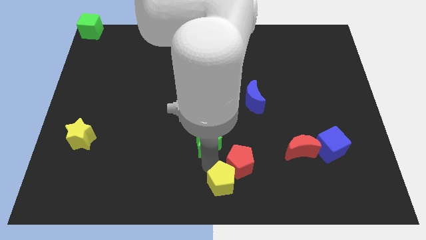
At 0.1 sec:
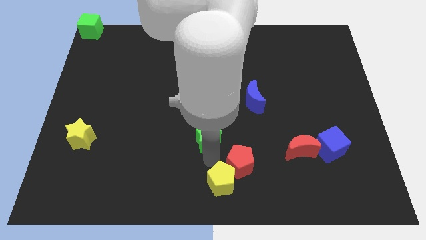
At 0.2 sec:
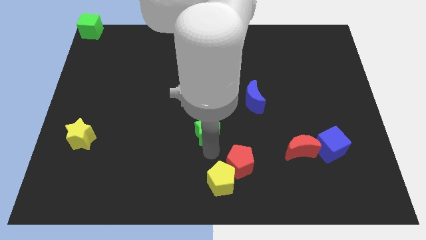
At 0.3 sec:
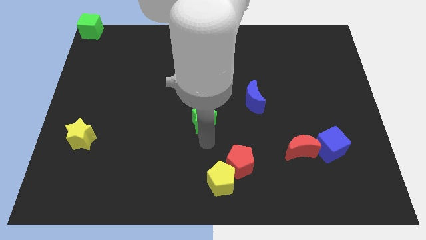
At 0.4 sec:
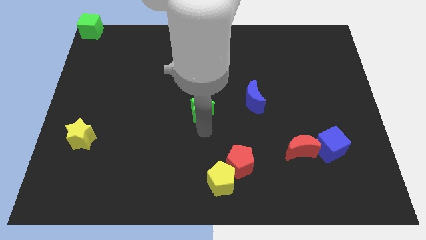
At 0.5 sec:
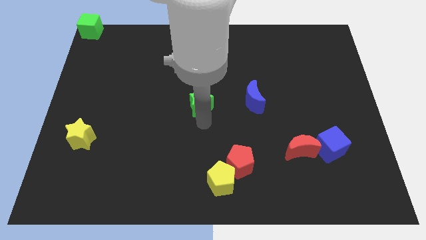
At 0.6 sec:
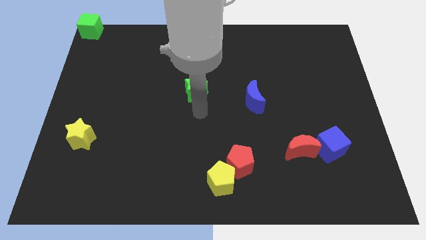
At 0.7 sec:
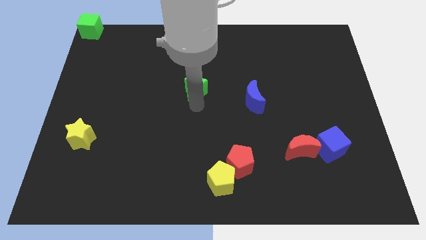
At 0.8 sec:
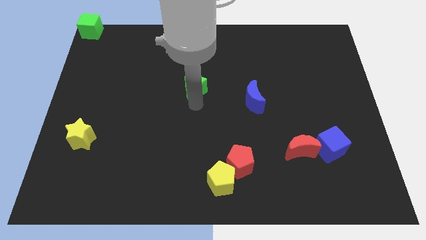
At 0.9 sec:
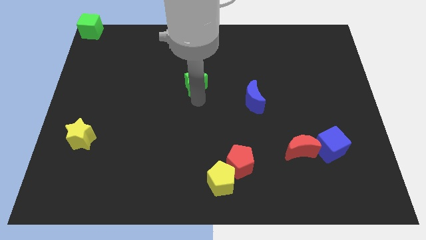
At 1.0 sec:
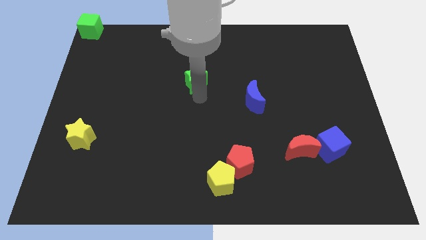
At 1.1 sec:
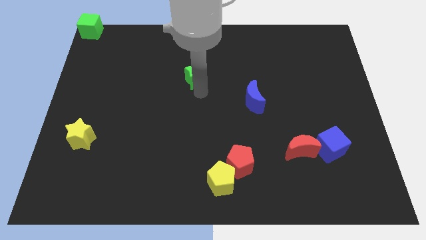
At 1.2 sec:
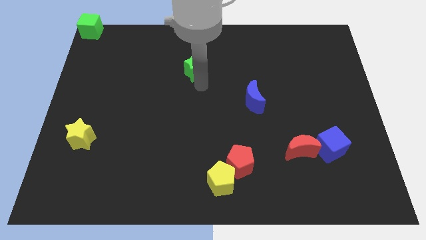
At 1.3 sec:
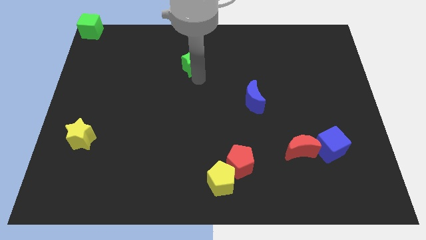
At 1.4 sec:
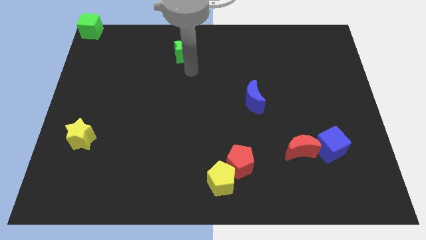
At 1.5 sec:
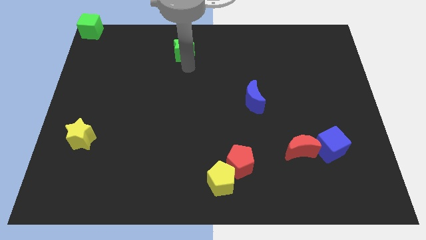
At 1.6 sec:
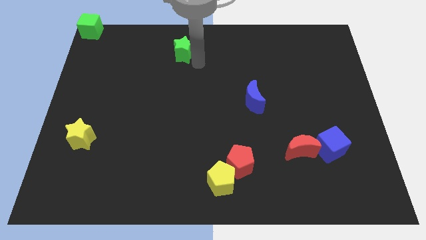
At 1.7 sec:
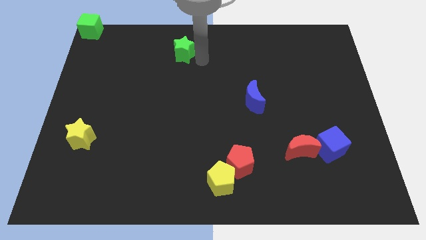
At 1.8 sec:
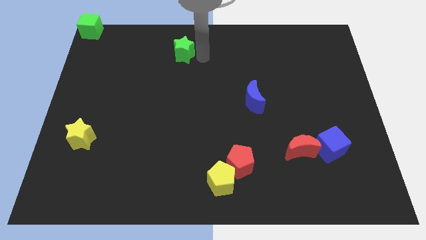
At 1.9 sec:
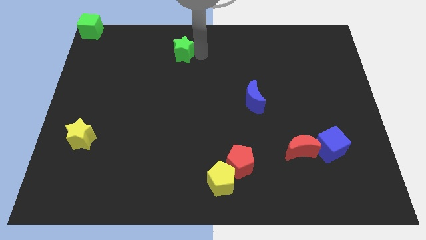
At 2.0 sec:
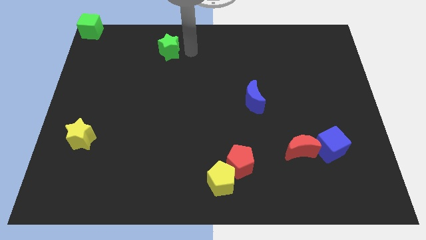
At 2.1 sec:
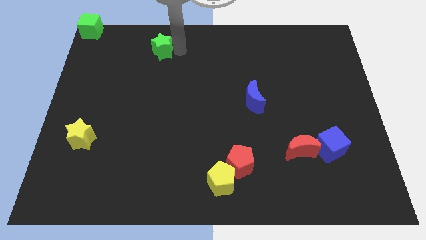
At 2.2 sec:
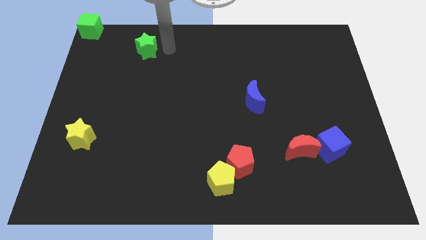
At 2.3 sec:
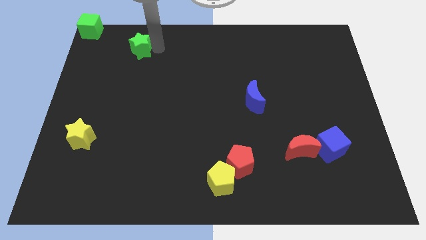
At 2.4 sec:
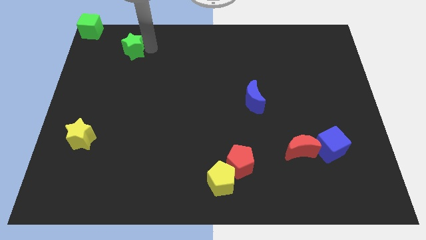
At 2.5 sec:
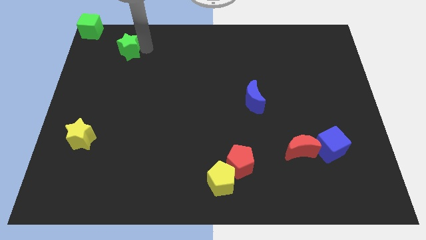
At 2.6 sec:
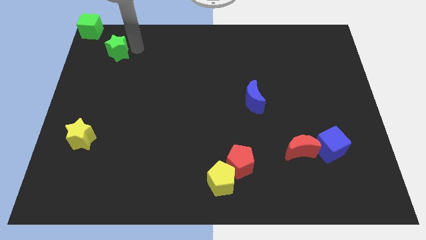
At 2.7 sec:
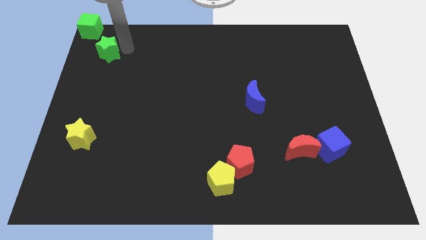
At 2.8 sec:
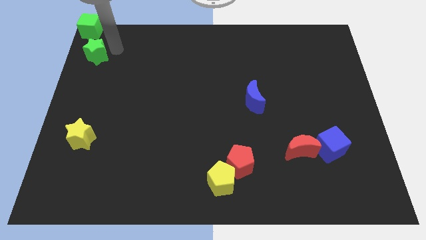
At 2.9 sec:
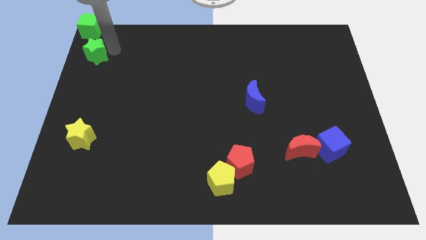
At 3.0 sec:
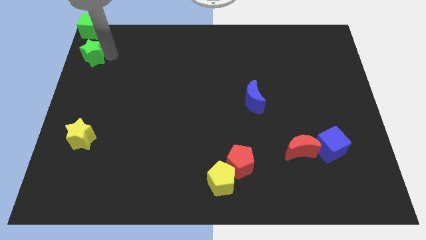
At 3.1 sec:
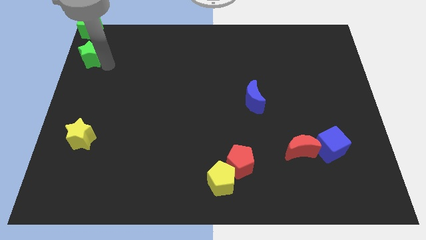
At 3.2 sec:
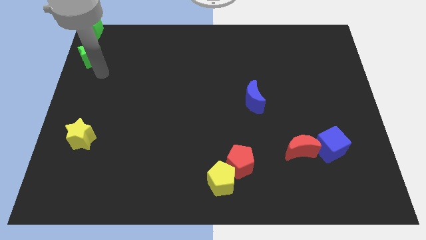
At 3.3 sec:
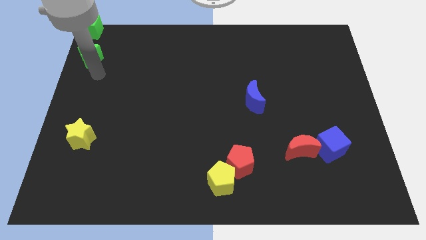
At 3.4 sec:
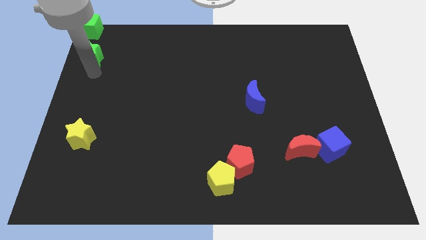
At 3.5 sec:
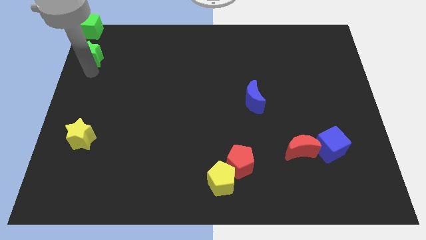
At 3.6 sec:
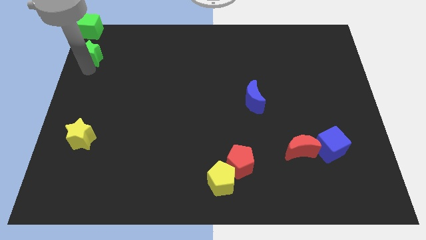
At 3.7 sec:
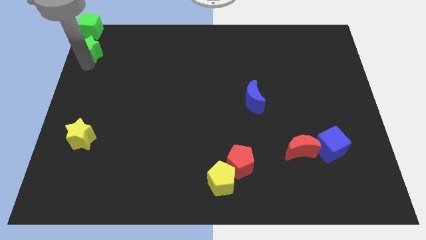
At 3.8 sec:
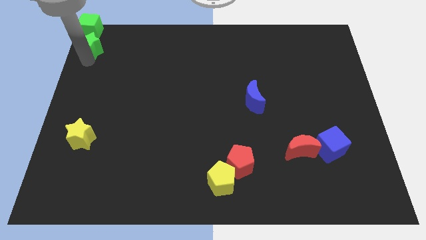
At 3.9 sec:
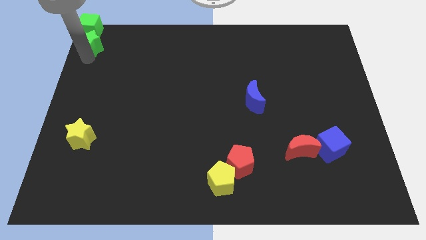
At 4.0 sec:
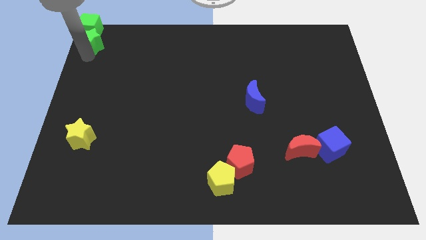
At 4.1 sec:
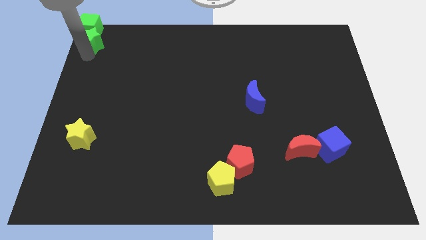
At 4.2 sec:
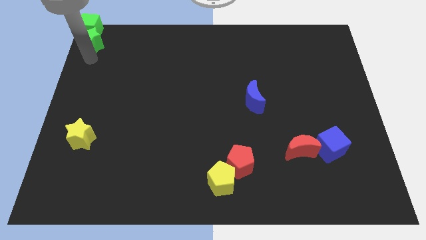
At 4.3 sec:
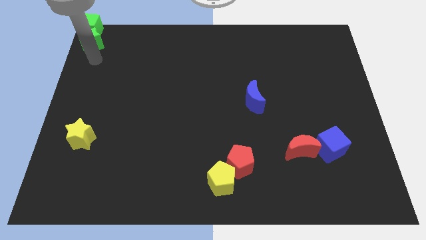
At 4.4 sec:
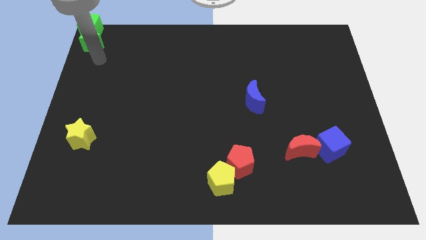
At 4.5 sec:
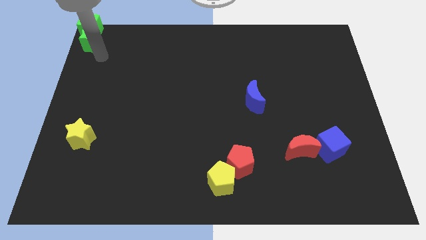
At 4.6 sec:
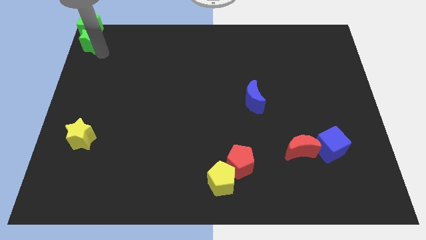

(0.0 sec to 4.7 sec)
move the green star to bottom of the green cube

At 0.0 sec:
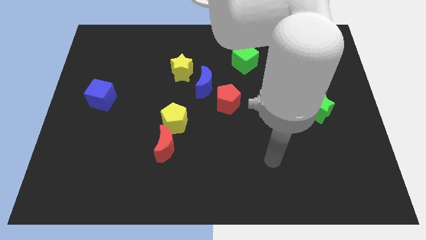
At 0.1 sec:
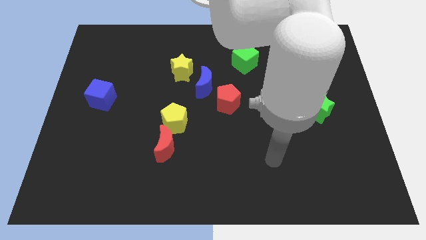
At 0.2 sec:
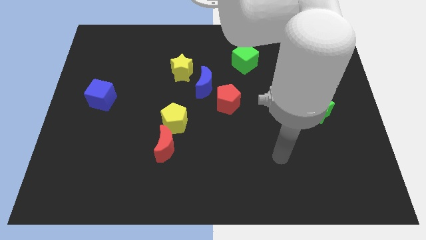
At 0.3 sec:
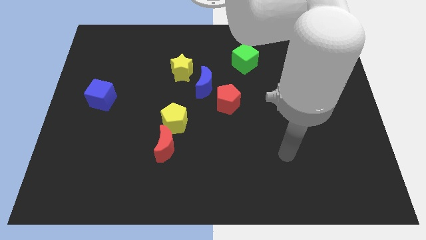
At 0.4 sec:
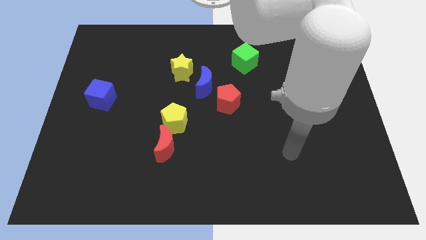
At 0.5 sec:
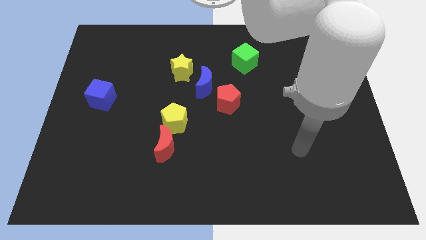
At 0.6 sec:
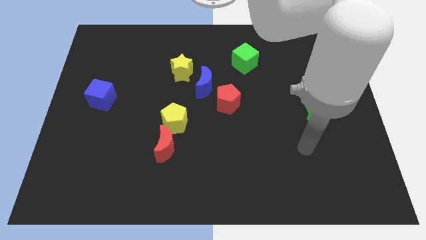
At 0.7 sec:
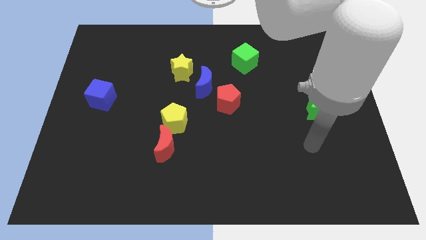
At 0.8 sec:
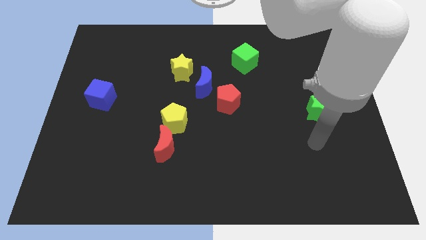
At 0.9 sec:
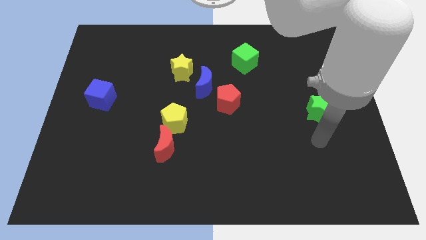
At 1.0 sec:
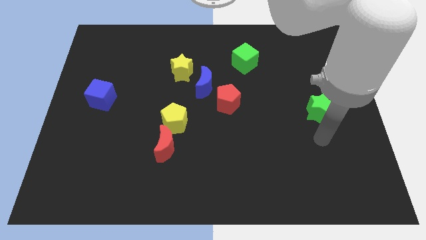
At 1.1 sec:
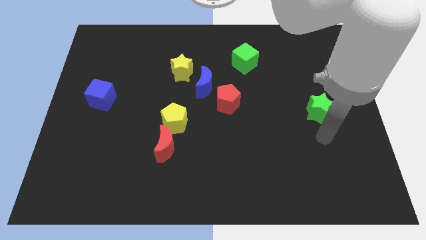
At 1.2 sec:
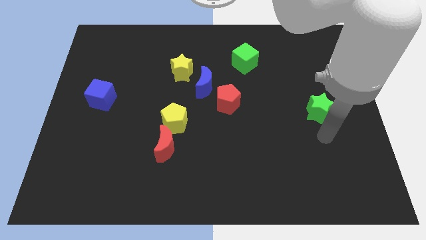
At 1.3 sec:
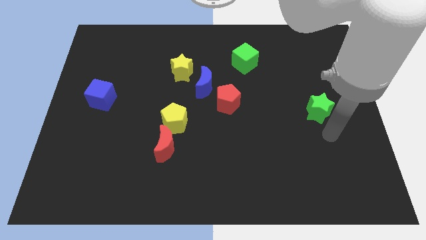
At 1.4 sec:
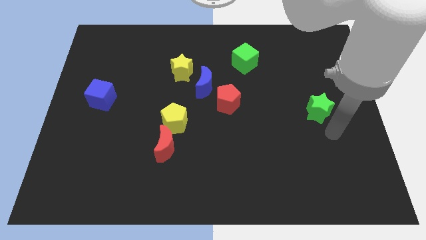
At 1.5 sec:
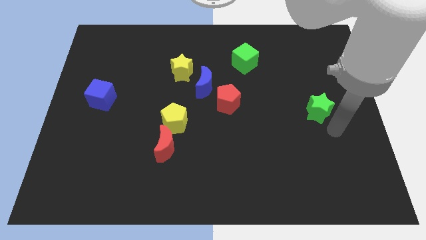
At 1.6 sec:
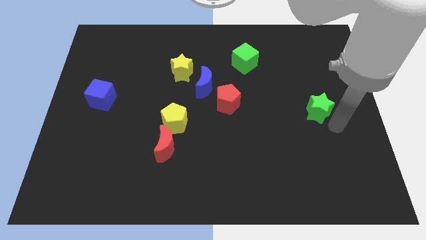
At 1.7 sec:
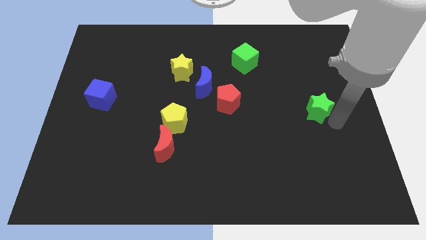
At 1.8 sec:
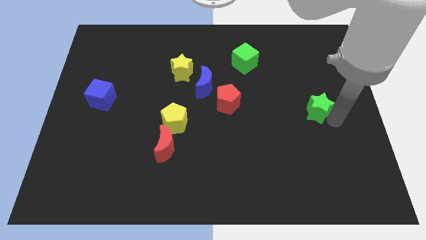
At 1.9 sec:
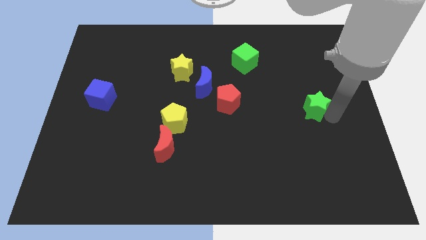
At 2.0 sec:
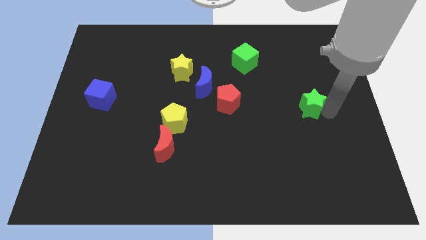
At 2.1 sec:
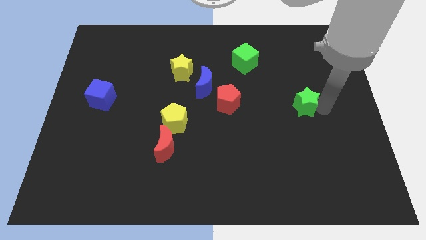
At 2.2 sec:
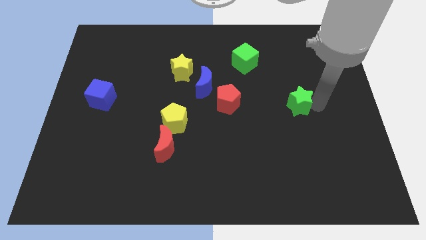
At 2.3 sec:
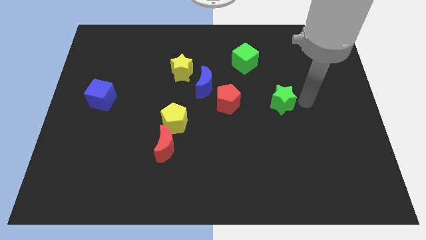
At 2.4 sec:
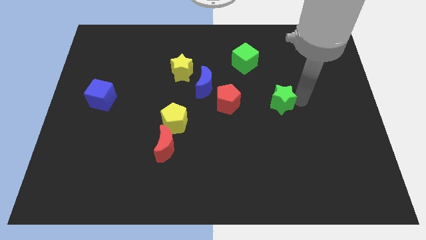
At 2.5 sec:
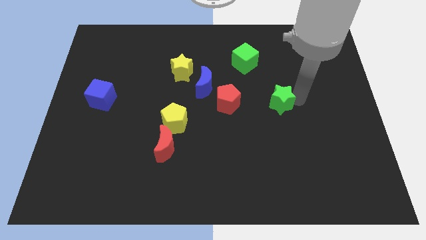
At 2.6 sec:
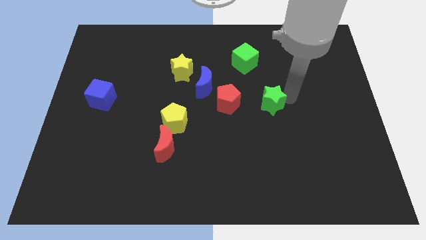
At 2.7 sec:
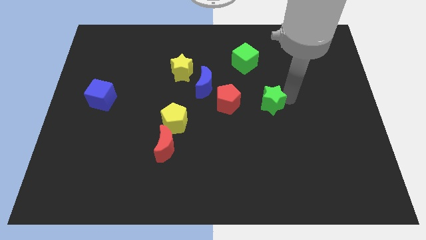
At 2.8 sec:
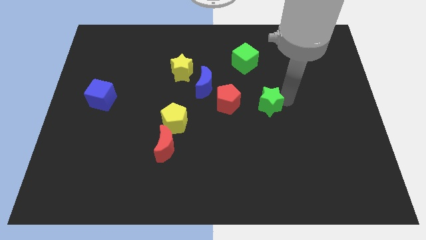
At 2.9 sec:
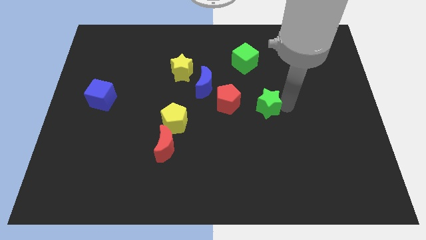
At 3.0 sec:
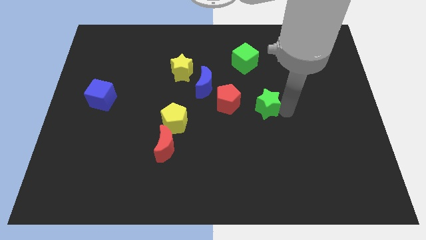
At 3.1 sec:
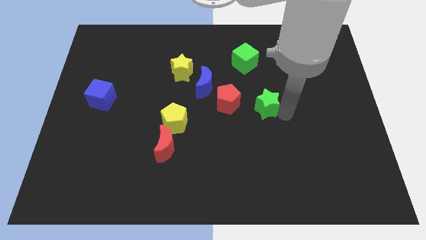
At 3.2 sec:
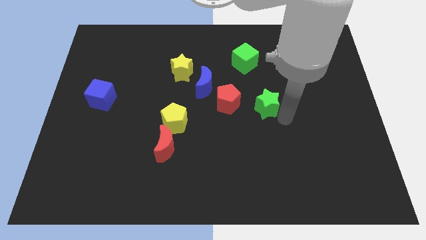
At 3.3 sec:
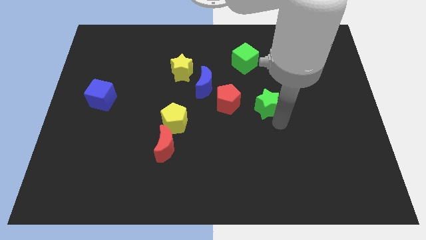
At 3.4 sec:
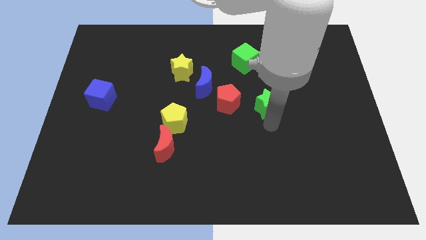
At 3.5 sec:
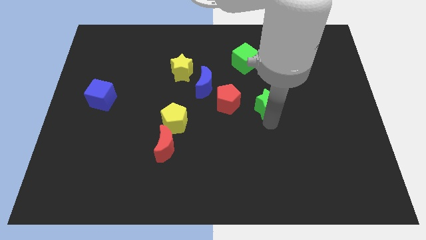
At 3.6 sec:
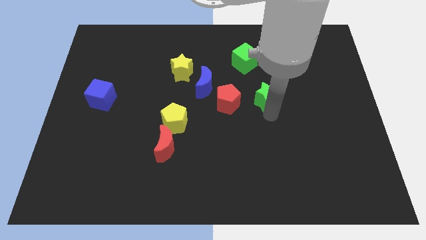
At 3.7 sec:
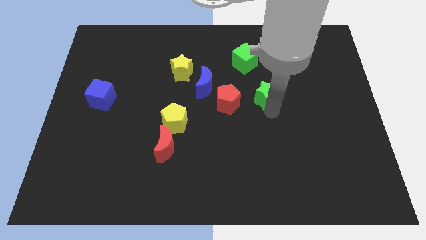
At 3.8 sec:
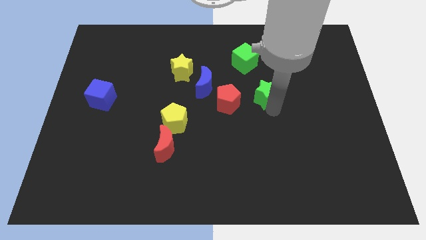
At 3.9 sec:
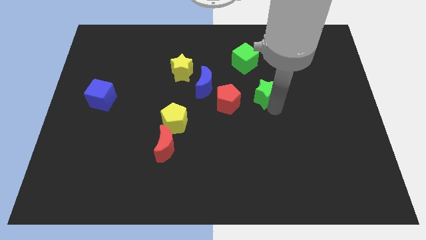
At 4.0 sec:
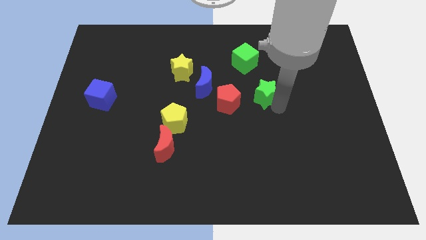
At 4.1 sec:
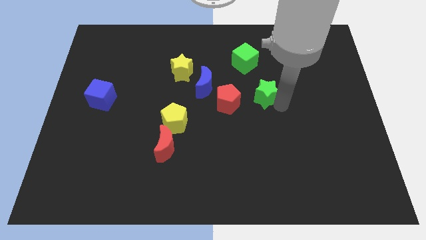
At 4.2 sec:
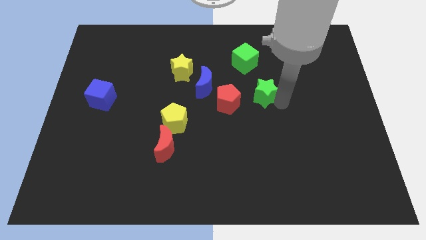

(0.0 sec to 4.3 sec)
move the green star to the right of the red pentagon
